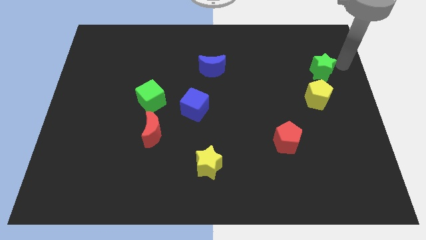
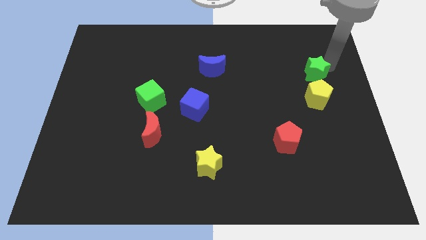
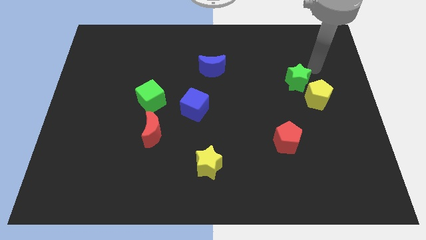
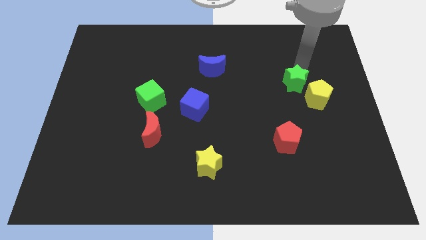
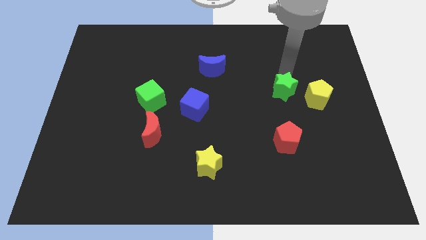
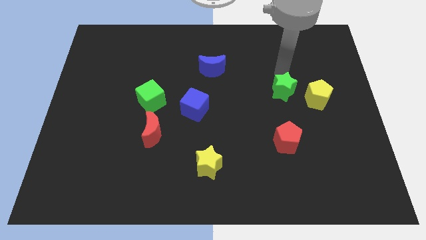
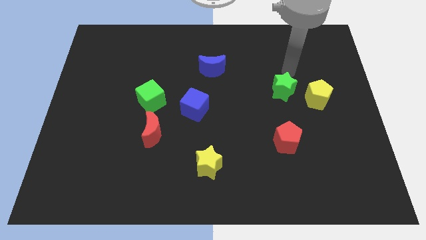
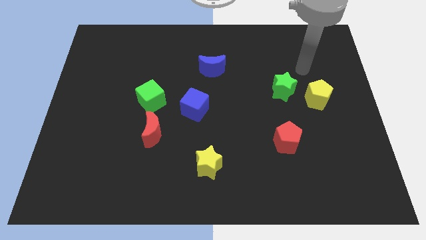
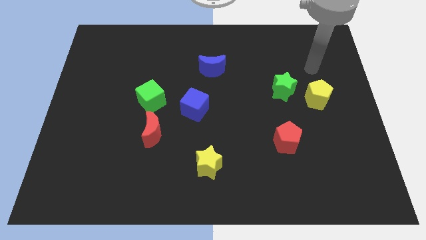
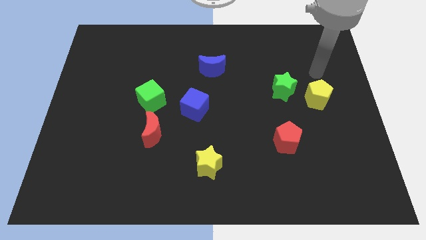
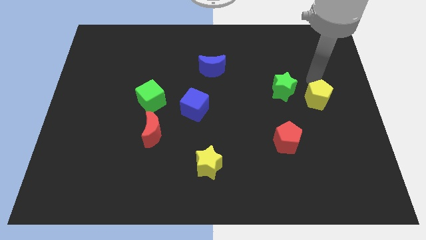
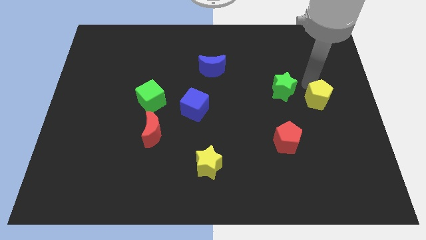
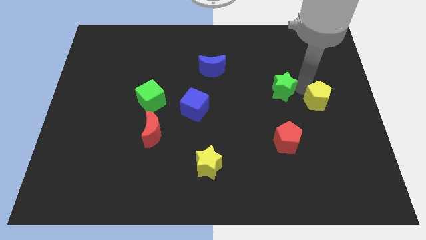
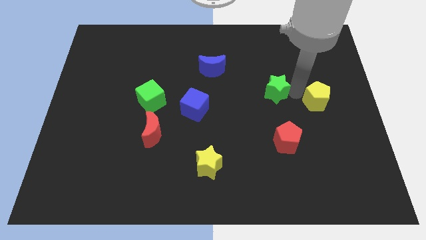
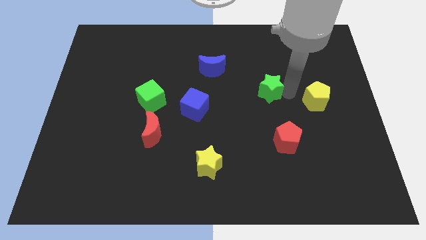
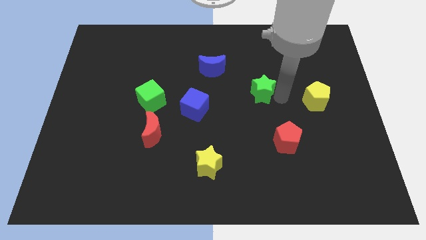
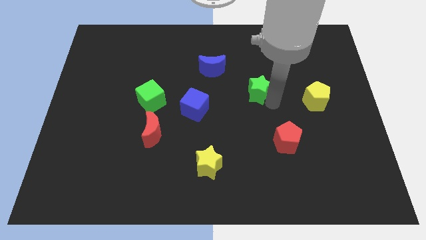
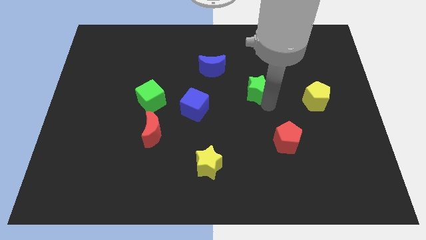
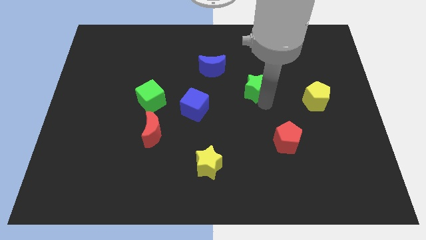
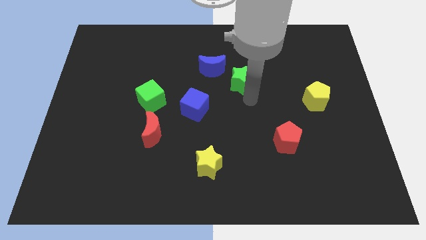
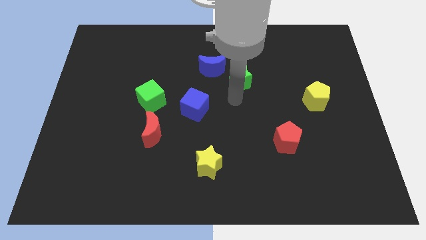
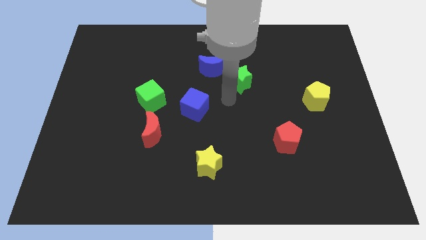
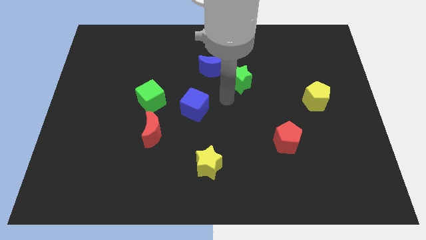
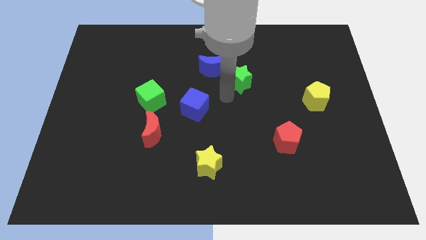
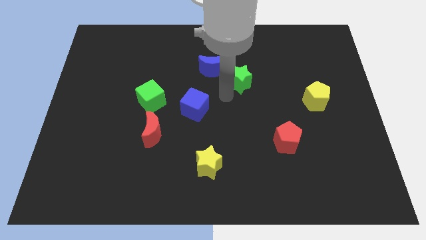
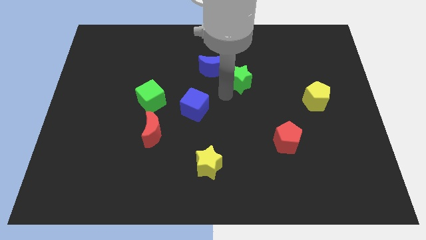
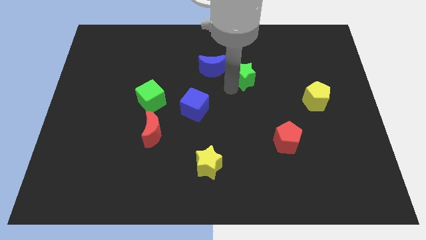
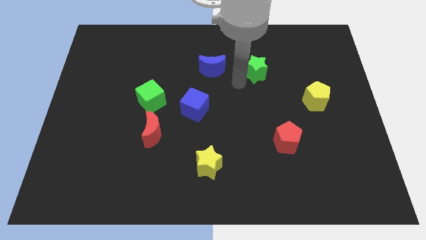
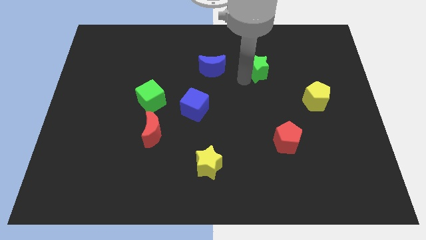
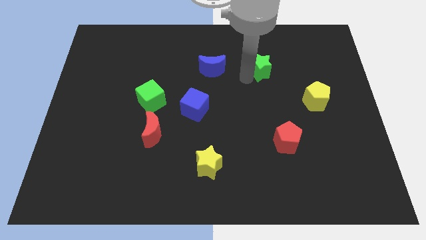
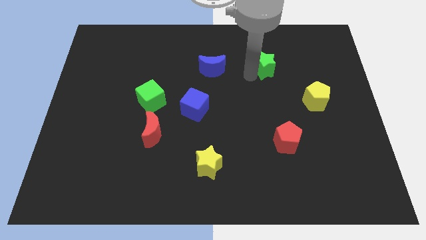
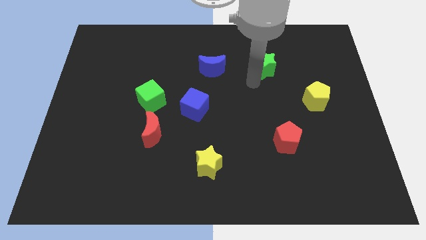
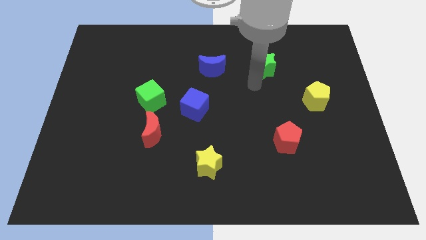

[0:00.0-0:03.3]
place green star beside blue crescent

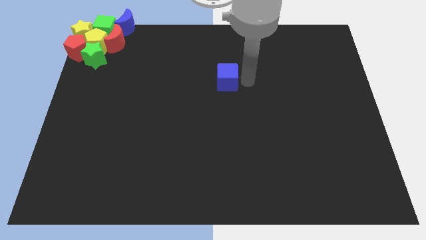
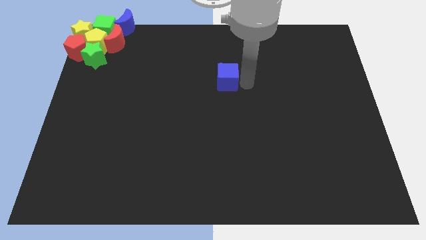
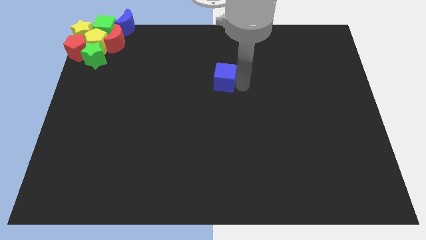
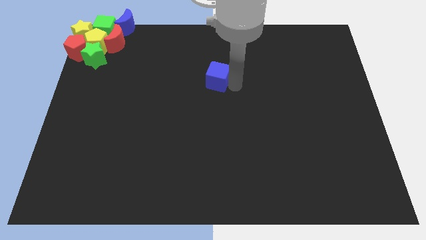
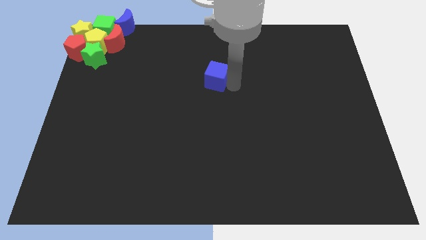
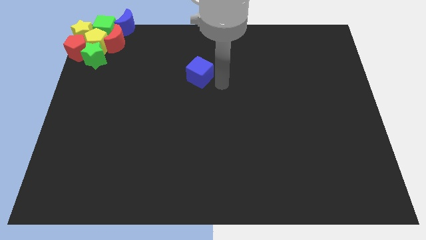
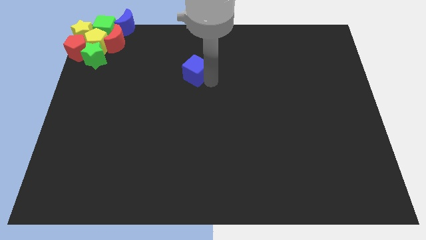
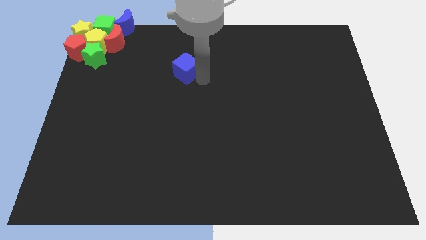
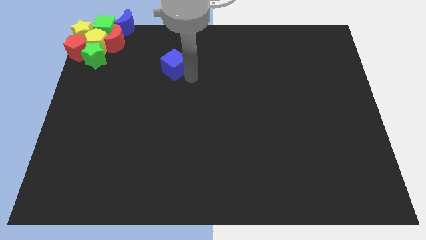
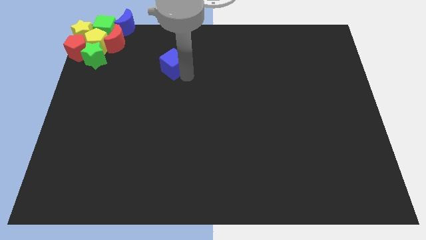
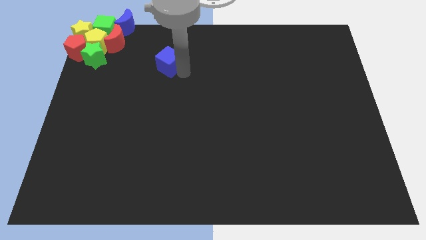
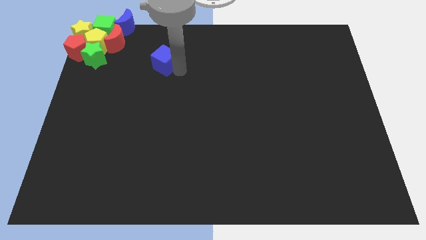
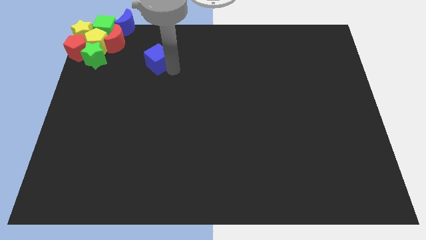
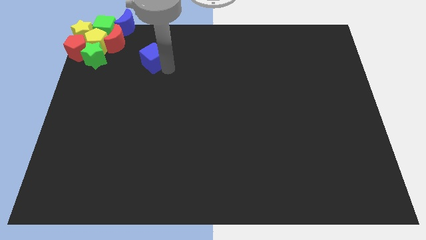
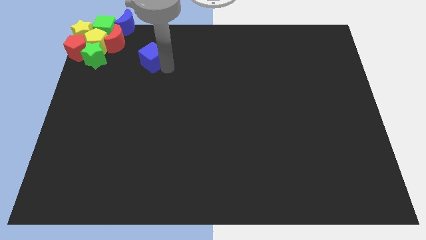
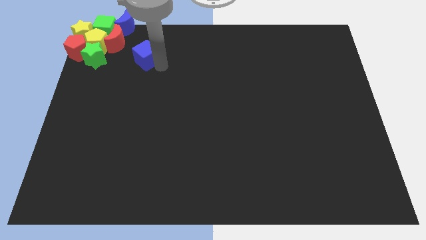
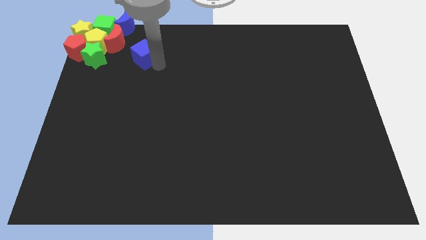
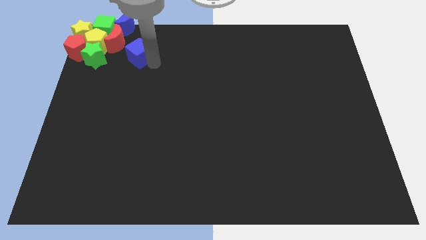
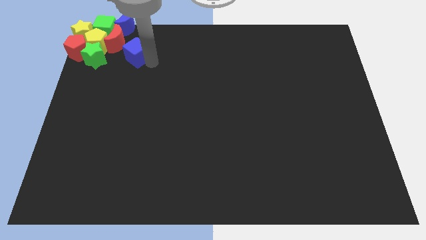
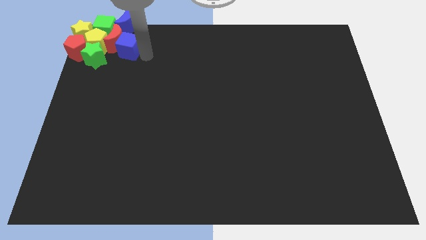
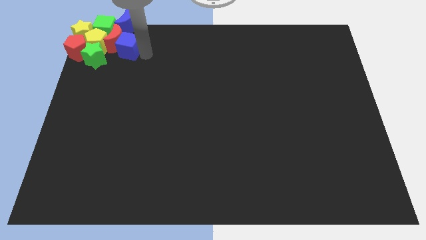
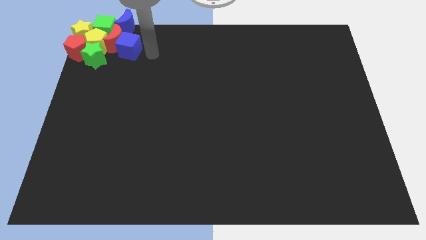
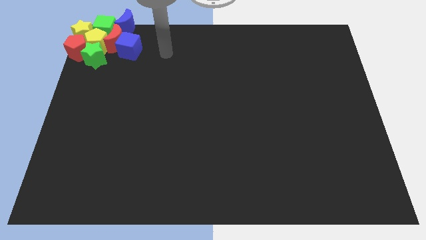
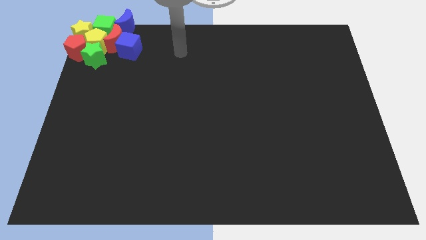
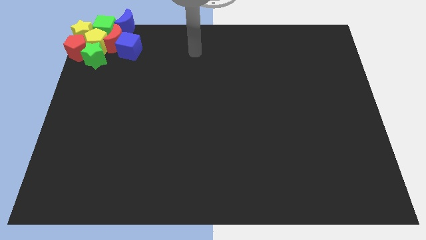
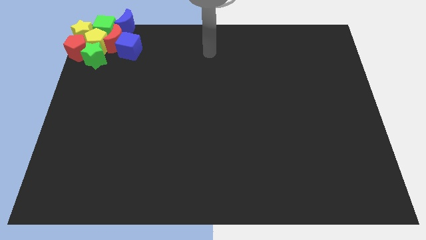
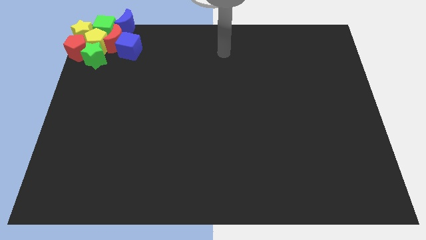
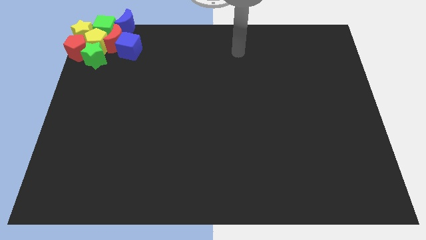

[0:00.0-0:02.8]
place the blue cube right to the red moon

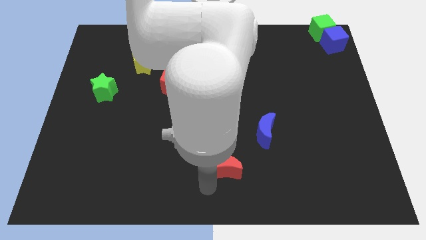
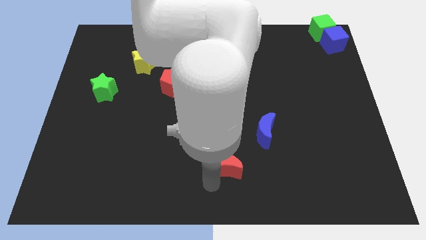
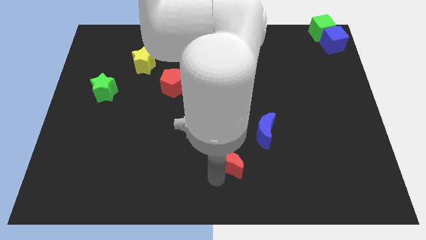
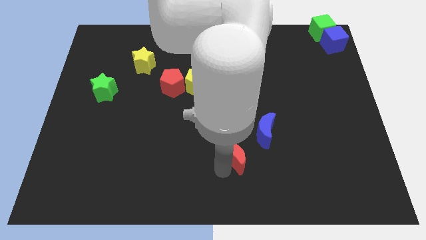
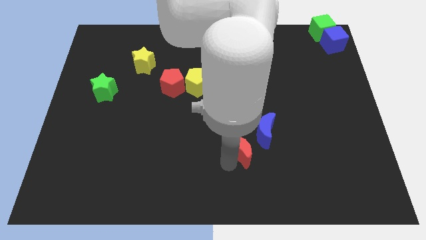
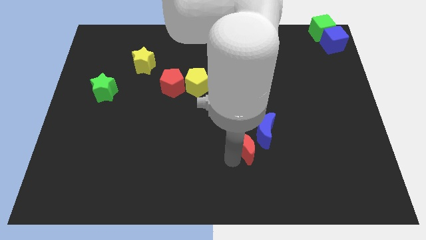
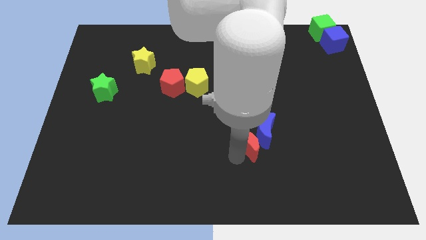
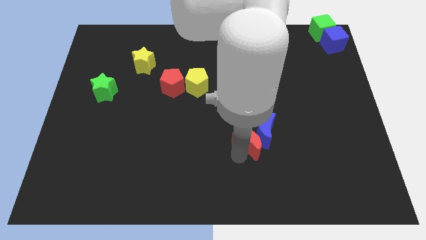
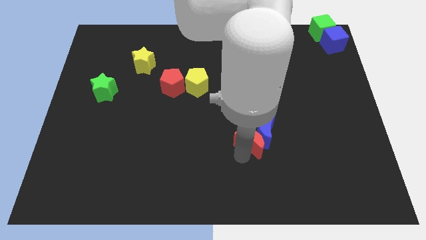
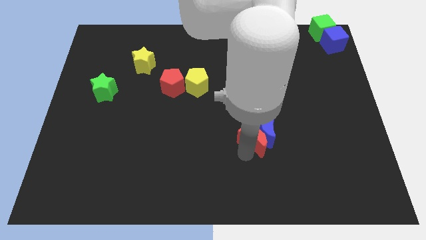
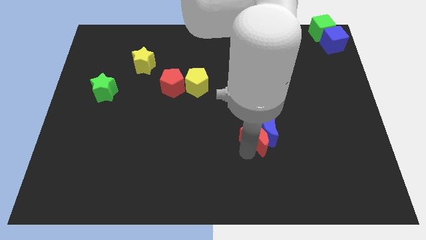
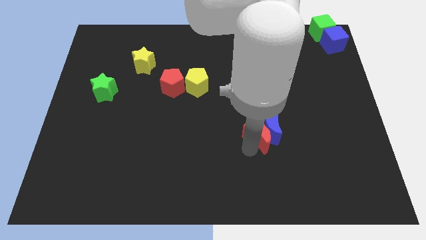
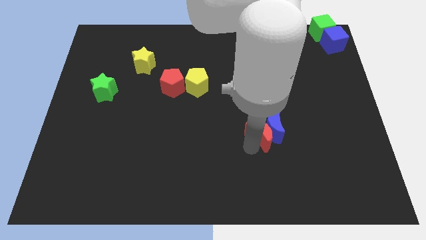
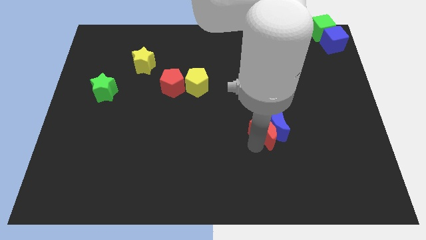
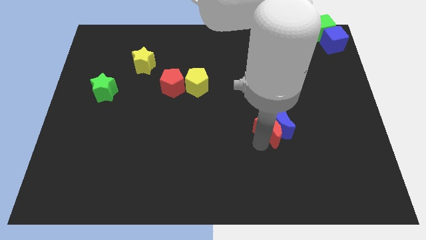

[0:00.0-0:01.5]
push the red crescent into the blue crescent

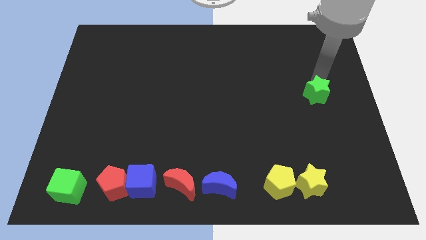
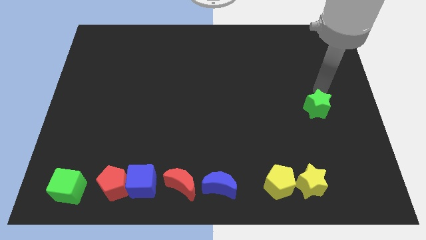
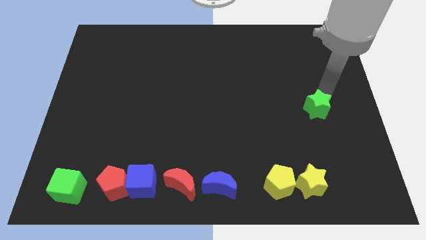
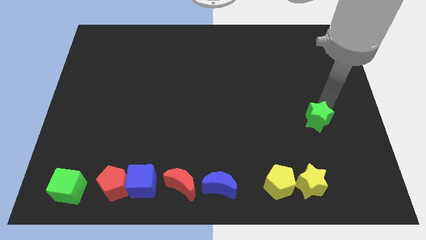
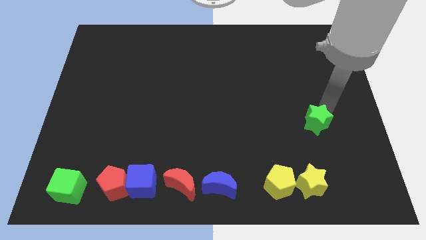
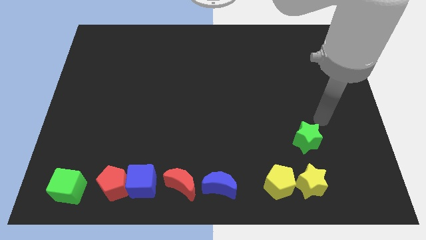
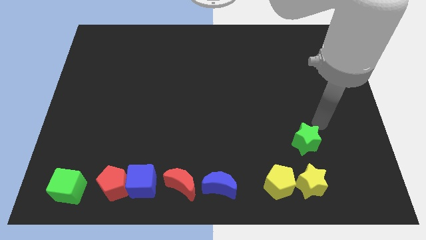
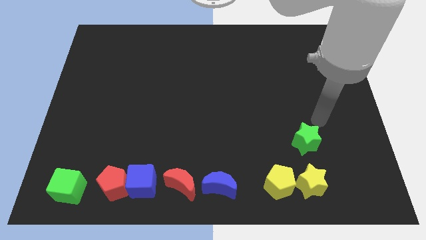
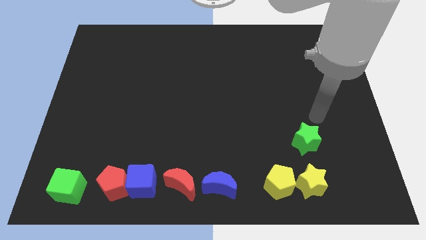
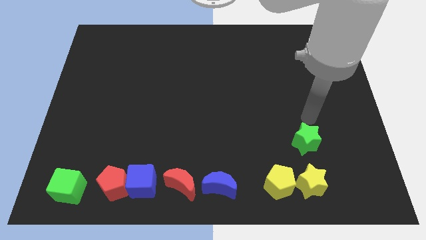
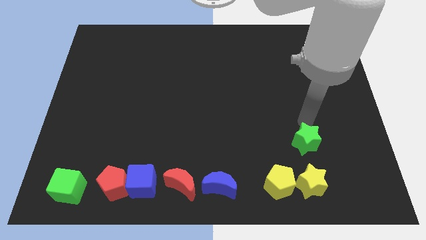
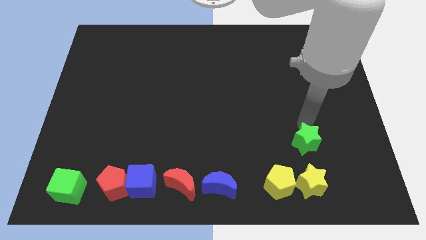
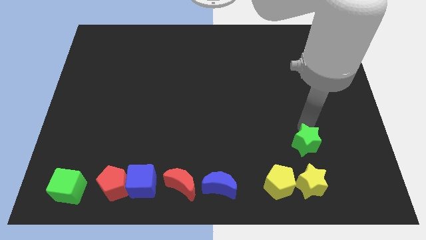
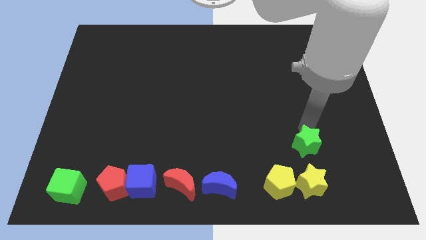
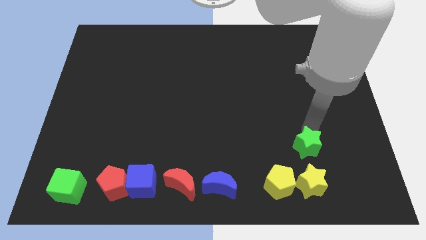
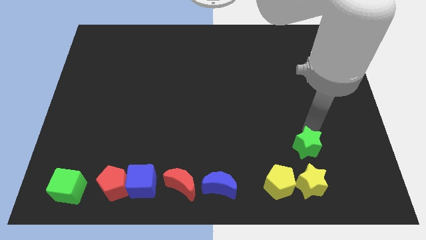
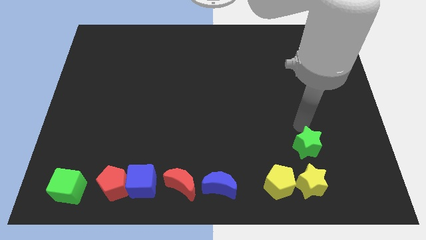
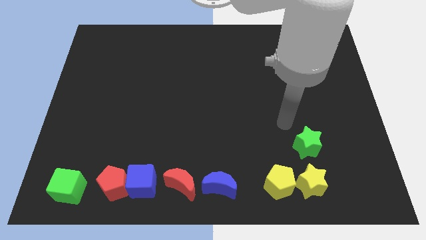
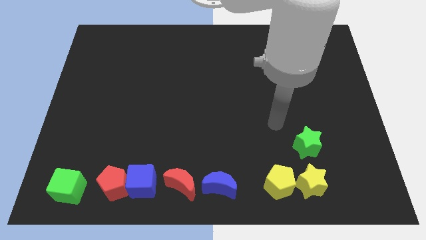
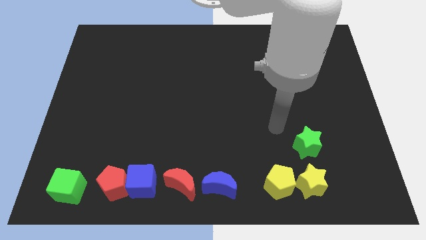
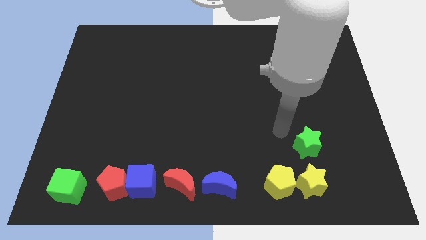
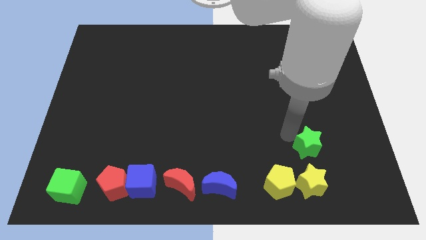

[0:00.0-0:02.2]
place the green star above the yellow star
